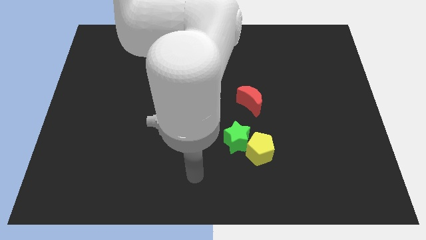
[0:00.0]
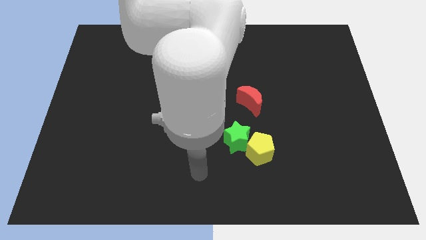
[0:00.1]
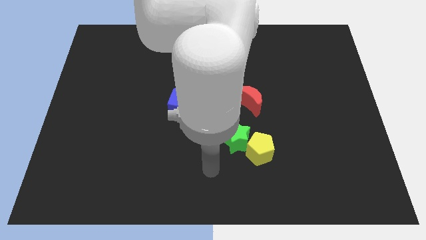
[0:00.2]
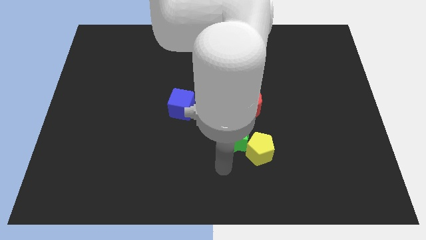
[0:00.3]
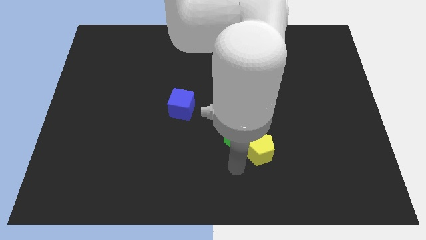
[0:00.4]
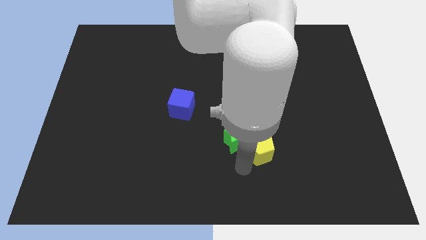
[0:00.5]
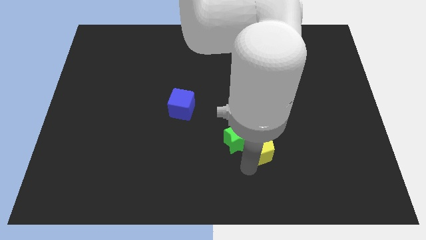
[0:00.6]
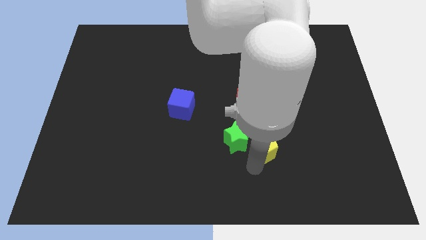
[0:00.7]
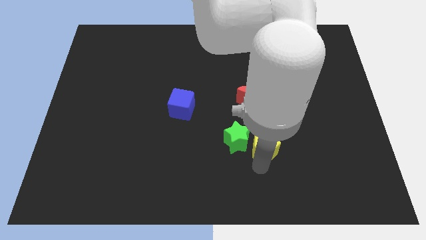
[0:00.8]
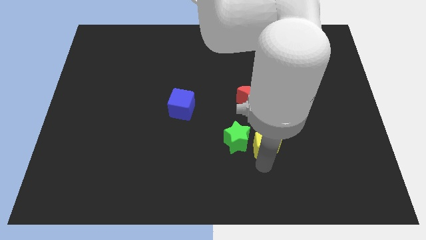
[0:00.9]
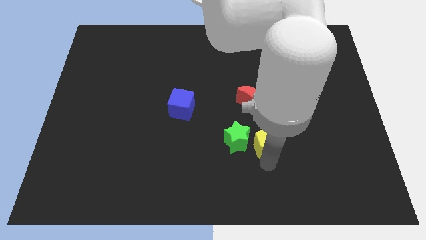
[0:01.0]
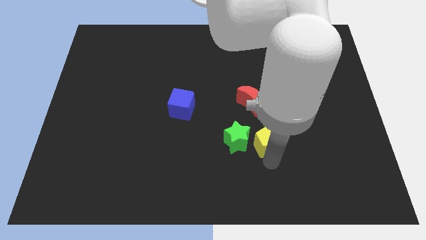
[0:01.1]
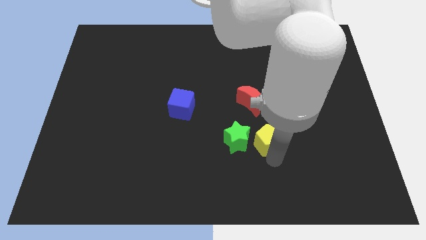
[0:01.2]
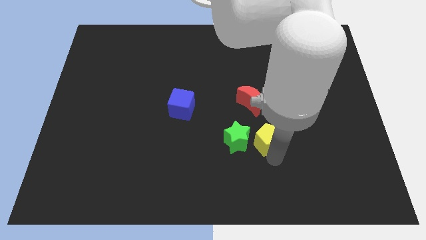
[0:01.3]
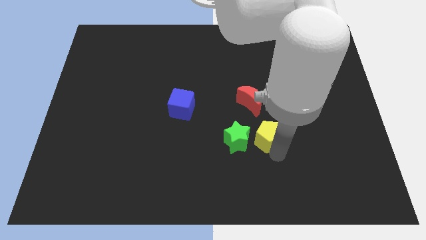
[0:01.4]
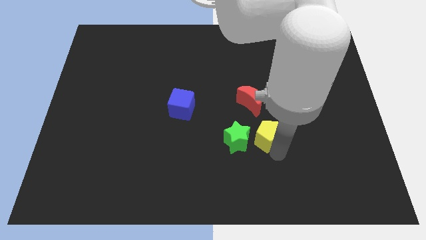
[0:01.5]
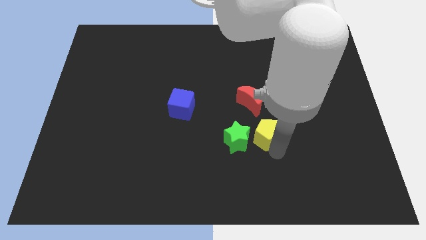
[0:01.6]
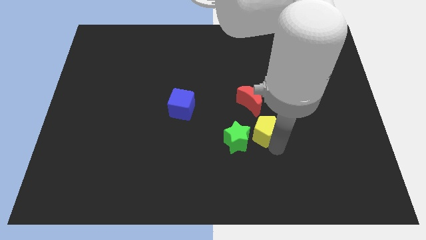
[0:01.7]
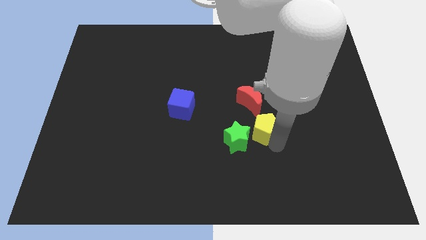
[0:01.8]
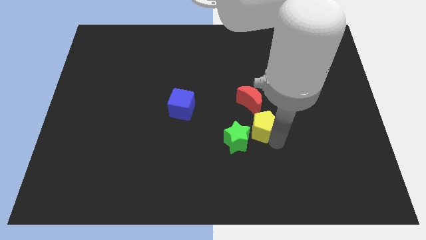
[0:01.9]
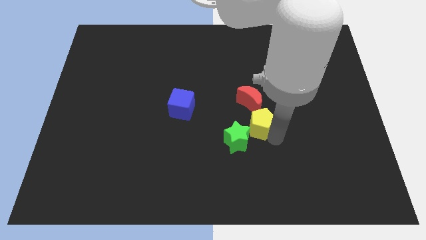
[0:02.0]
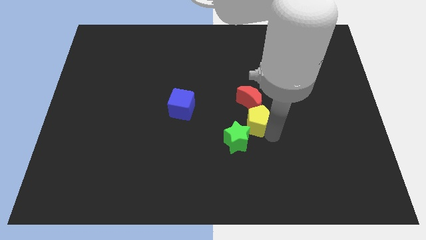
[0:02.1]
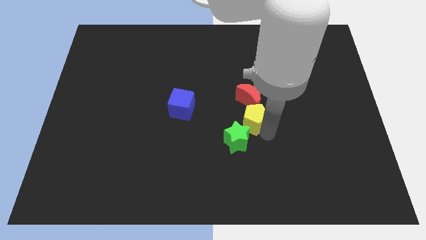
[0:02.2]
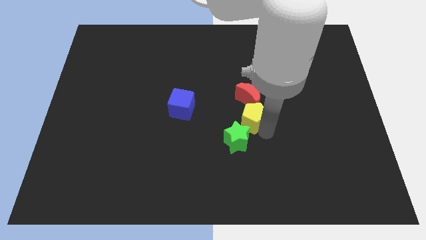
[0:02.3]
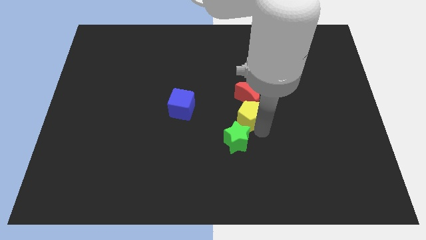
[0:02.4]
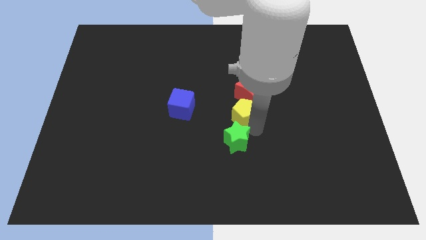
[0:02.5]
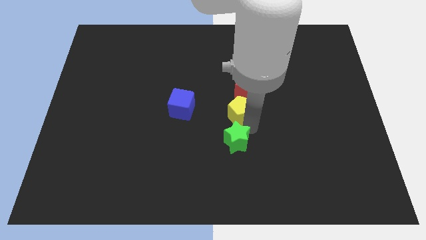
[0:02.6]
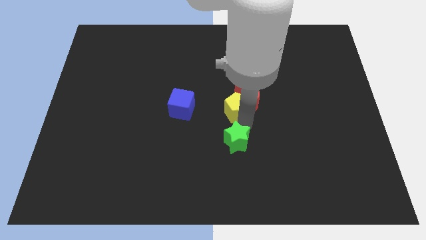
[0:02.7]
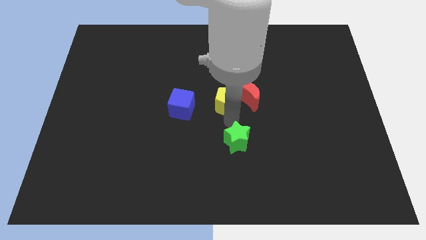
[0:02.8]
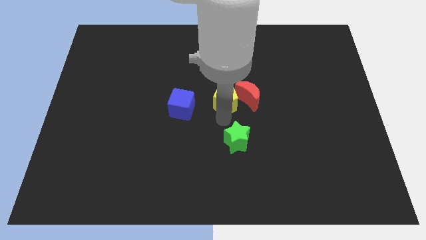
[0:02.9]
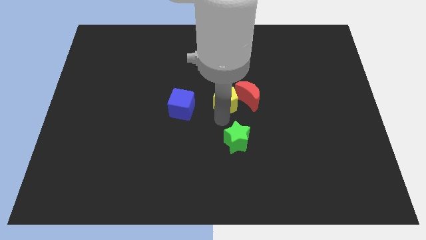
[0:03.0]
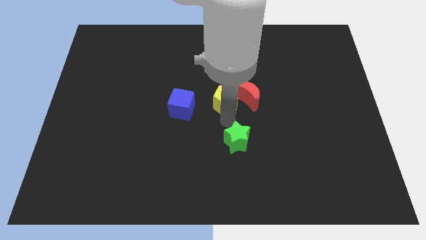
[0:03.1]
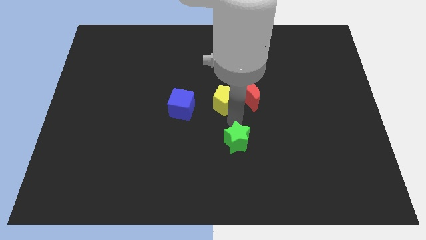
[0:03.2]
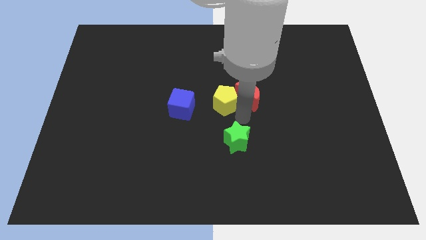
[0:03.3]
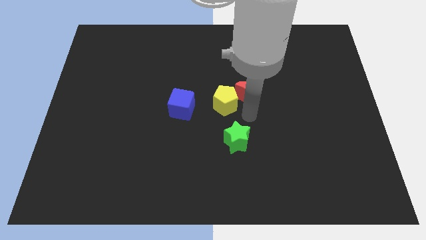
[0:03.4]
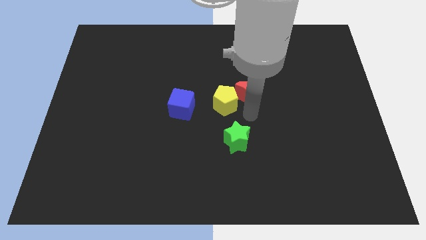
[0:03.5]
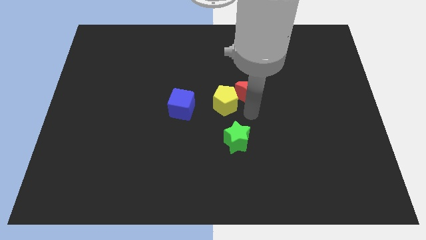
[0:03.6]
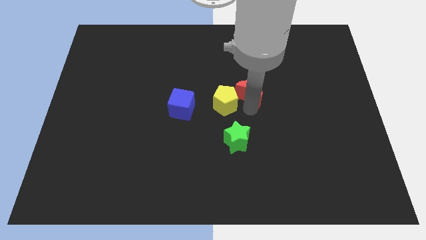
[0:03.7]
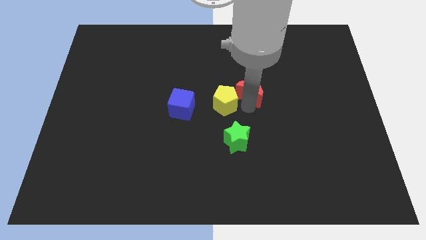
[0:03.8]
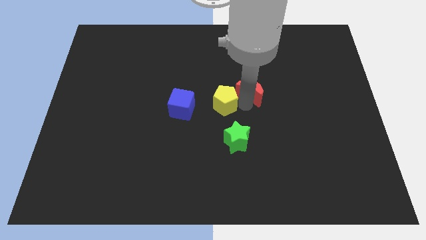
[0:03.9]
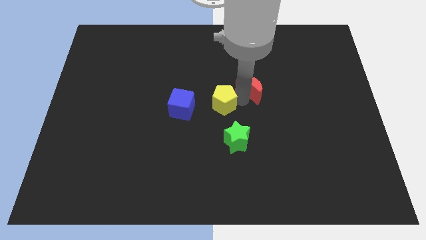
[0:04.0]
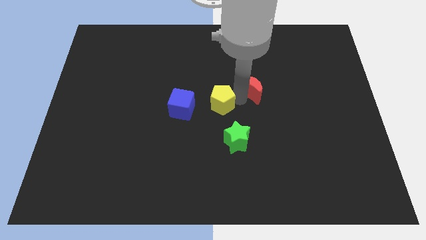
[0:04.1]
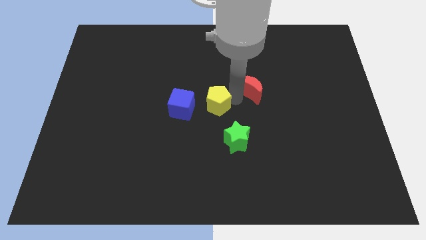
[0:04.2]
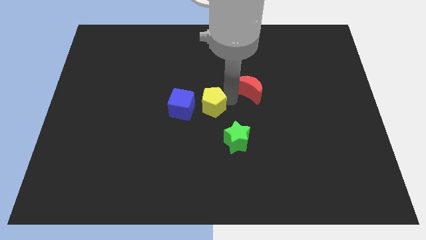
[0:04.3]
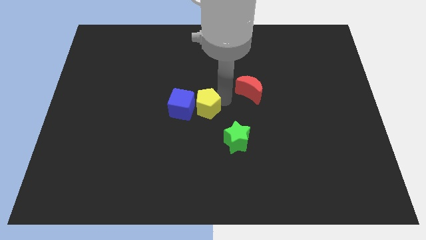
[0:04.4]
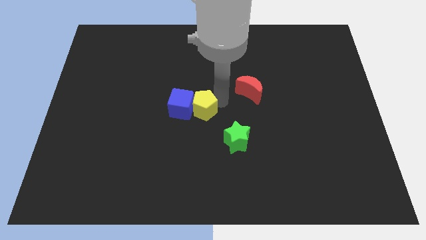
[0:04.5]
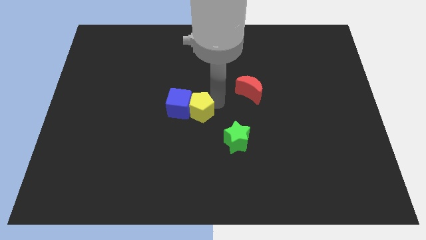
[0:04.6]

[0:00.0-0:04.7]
put the pentagon close to the blue block

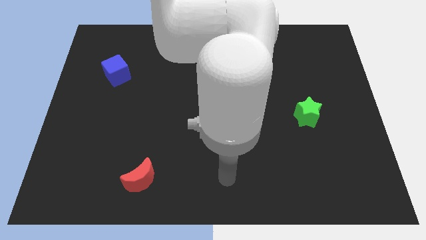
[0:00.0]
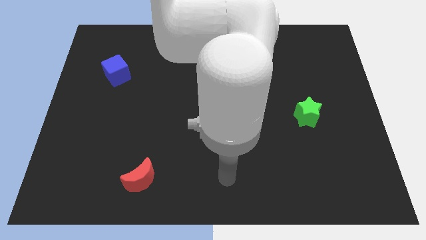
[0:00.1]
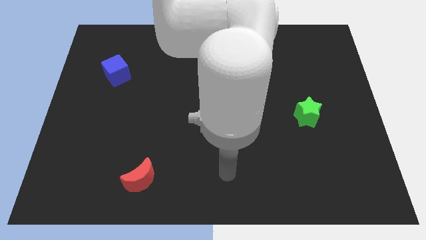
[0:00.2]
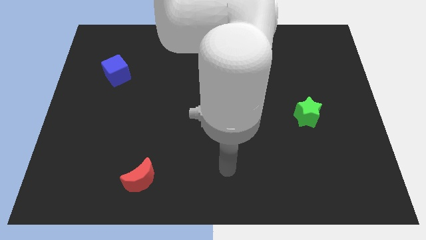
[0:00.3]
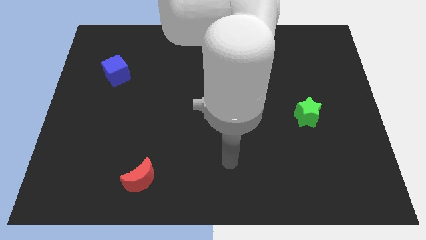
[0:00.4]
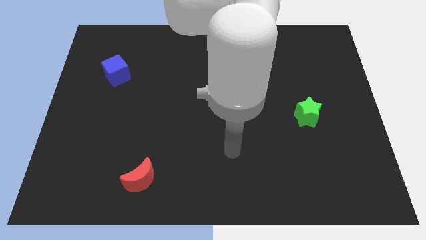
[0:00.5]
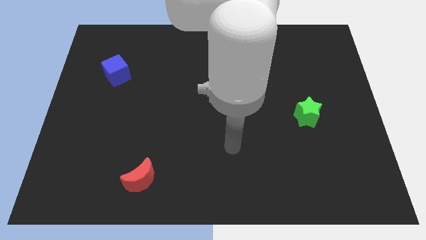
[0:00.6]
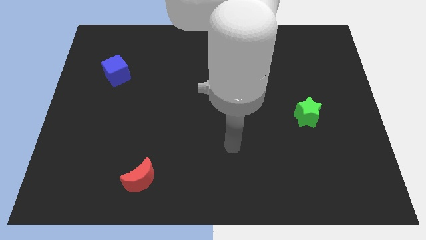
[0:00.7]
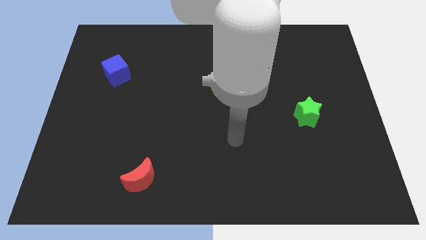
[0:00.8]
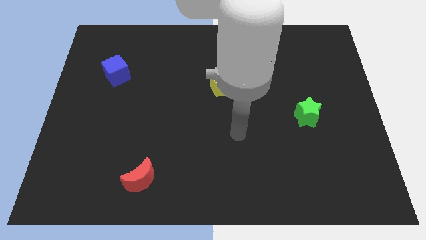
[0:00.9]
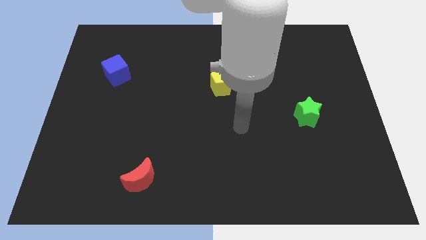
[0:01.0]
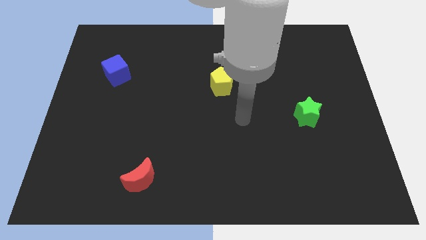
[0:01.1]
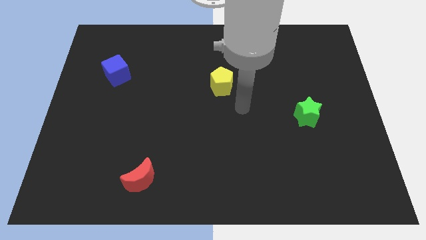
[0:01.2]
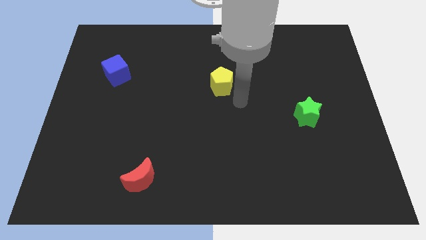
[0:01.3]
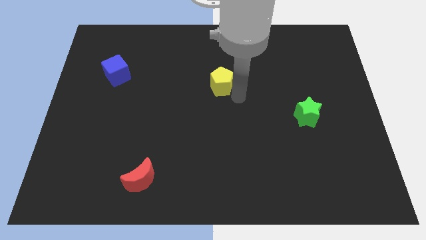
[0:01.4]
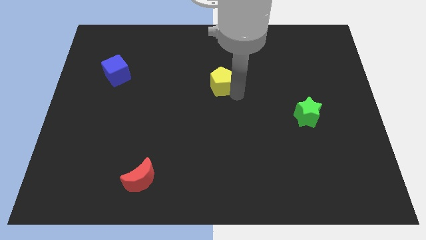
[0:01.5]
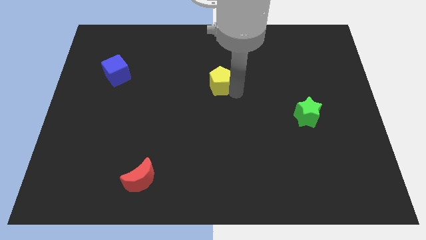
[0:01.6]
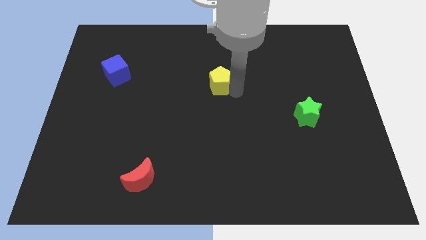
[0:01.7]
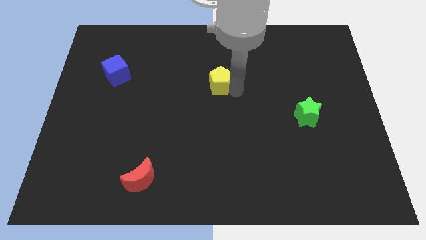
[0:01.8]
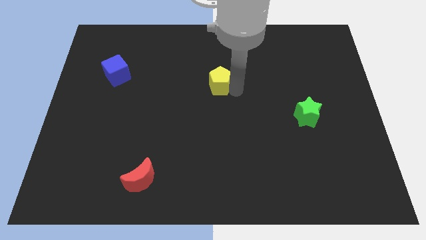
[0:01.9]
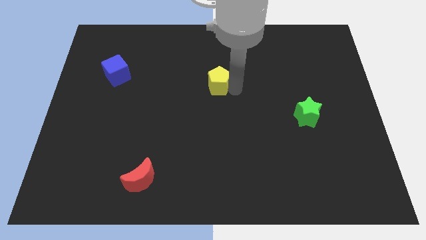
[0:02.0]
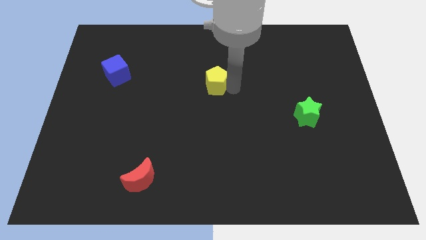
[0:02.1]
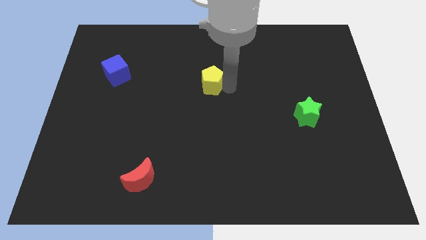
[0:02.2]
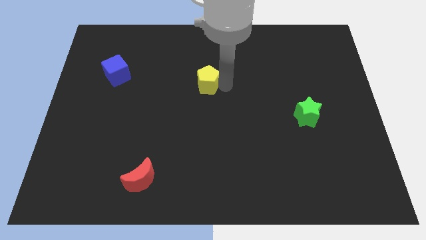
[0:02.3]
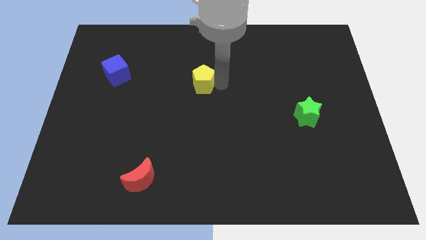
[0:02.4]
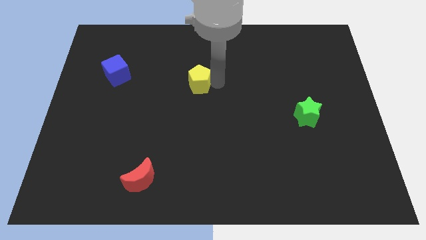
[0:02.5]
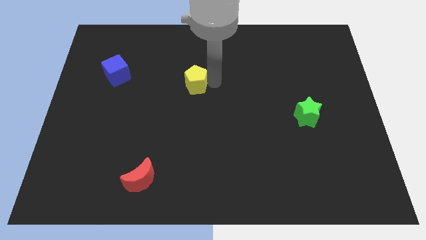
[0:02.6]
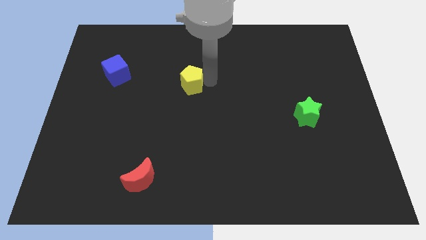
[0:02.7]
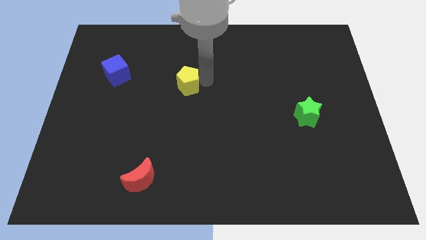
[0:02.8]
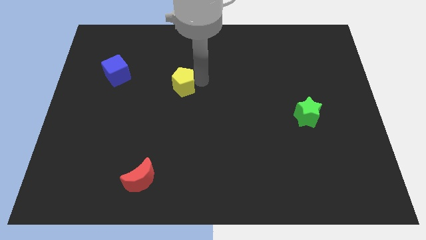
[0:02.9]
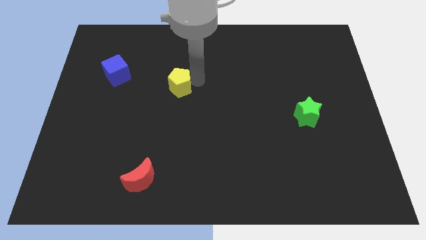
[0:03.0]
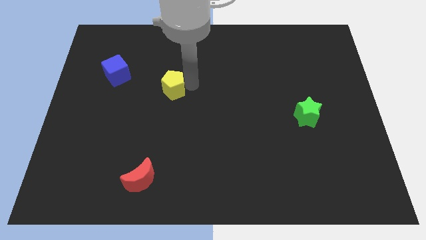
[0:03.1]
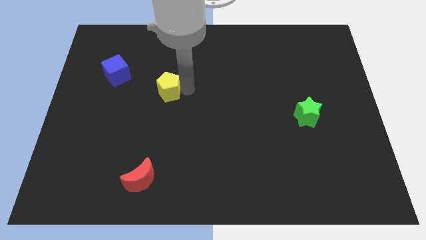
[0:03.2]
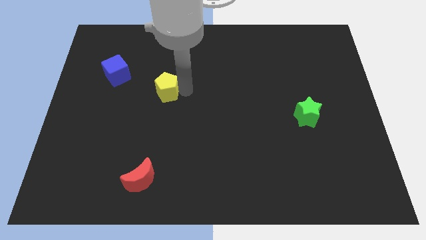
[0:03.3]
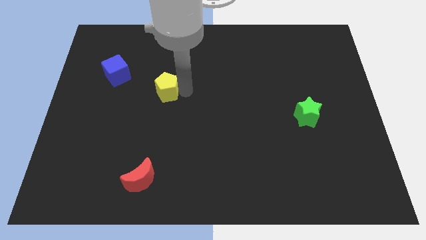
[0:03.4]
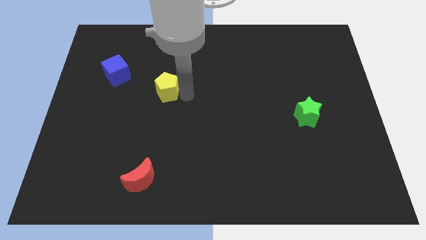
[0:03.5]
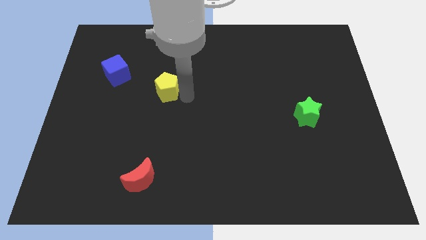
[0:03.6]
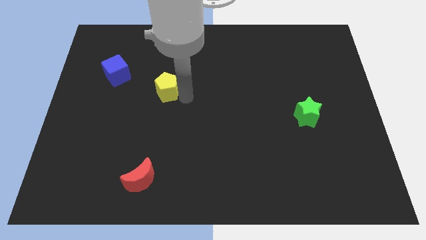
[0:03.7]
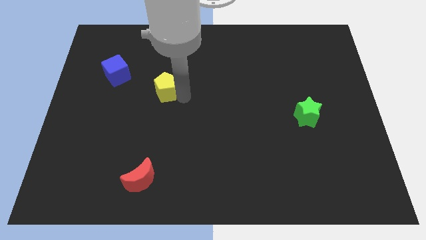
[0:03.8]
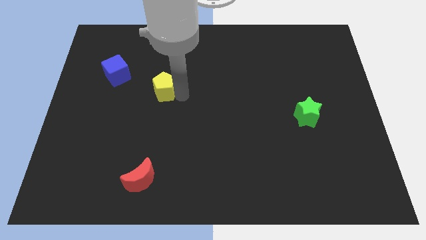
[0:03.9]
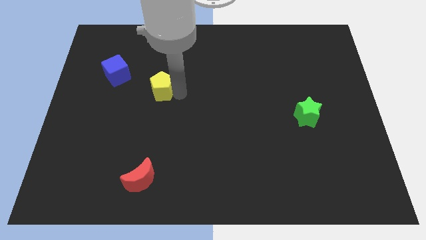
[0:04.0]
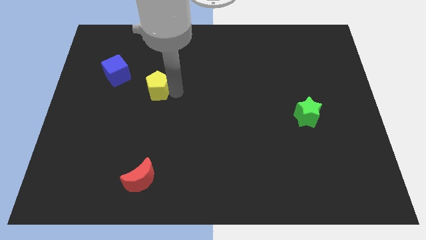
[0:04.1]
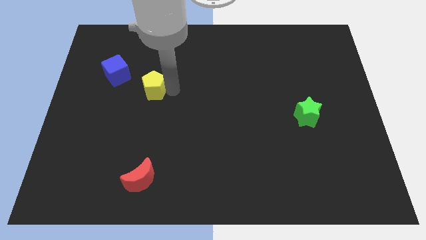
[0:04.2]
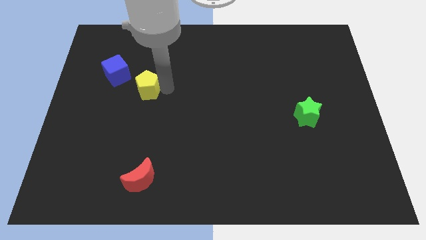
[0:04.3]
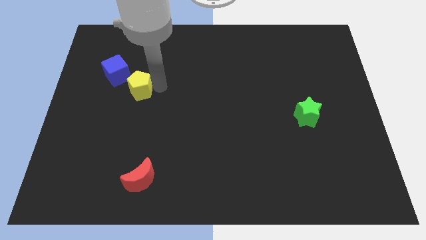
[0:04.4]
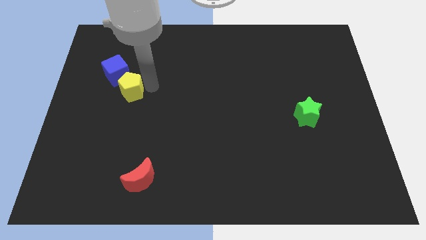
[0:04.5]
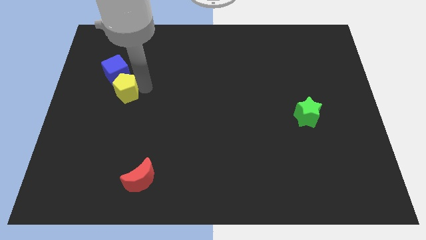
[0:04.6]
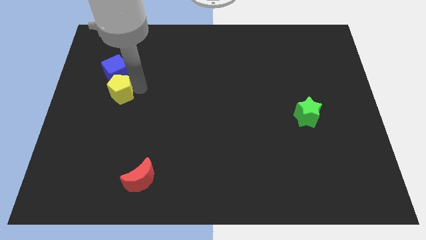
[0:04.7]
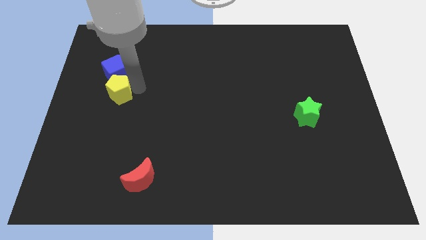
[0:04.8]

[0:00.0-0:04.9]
slide the yellow pentagon close to the cube
